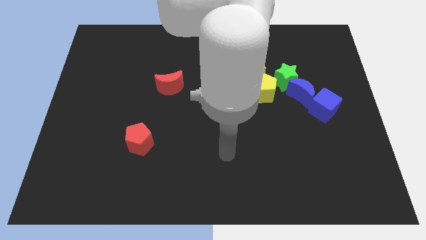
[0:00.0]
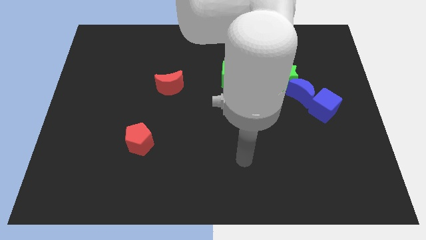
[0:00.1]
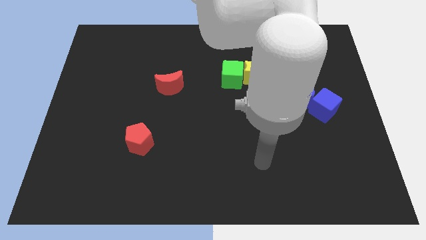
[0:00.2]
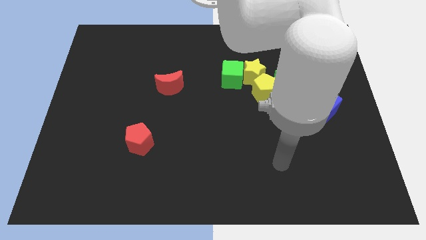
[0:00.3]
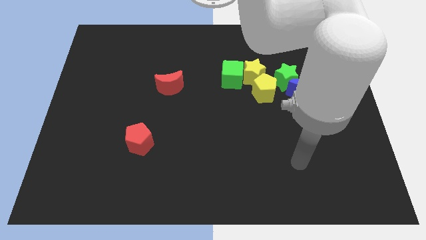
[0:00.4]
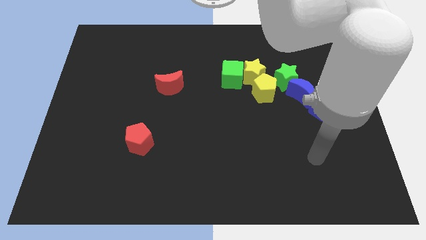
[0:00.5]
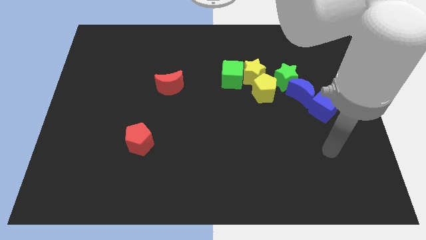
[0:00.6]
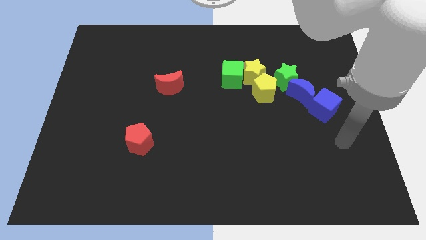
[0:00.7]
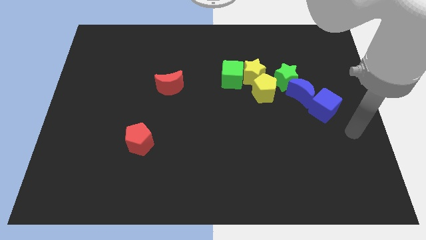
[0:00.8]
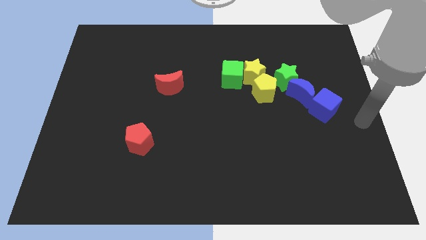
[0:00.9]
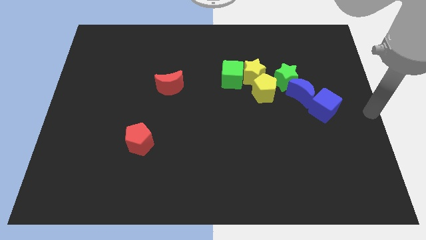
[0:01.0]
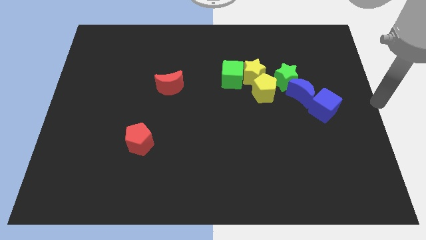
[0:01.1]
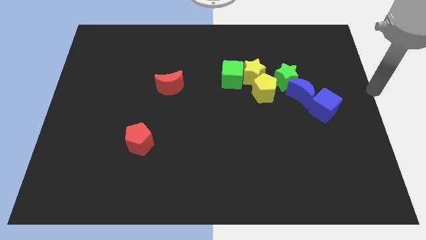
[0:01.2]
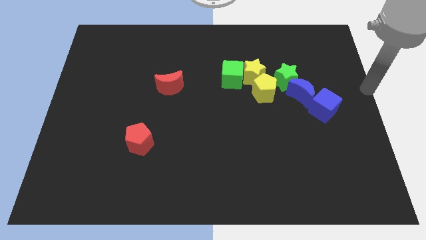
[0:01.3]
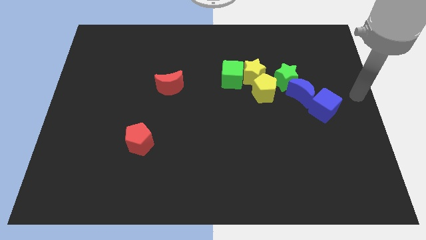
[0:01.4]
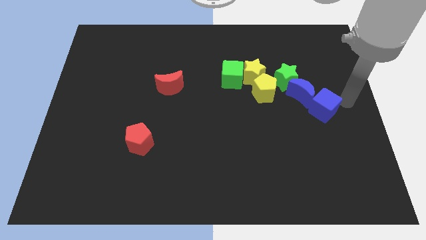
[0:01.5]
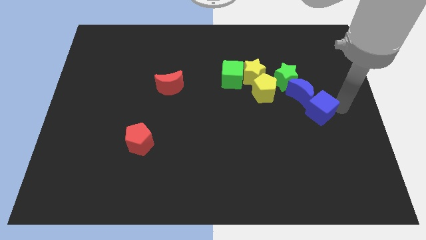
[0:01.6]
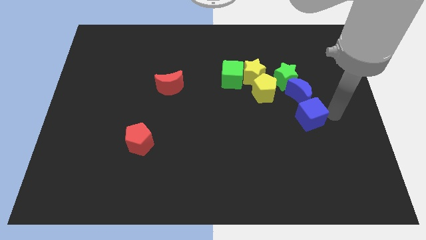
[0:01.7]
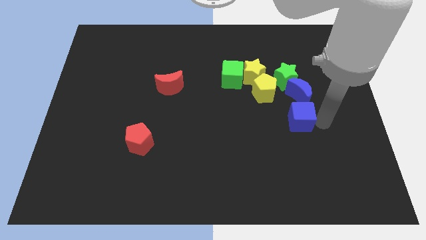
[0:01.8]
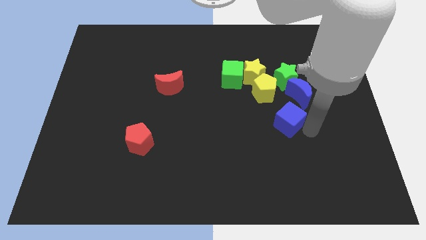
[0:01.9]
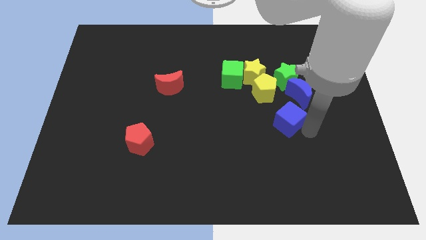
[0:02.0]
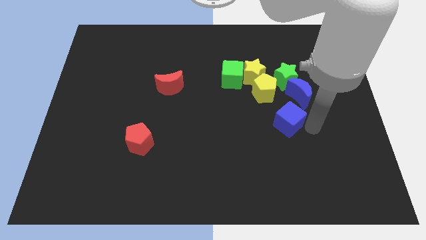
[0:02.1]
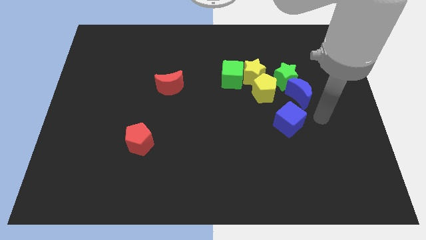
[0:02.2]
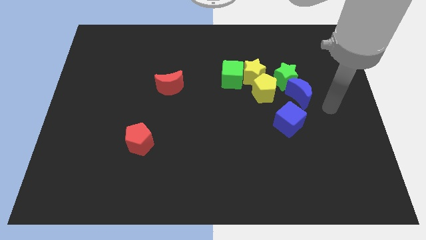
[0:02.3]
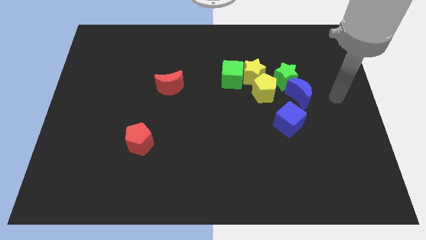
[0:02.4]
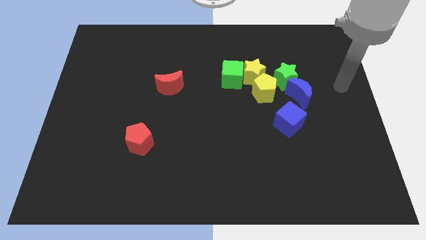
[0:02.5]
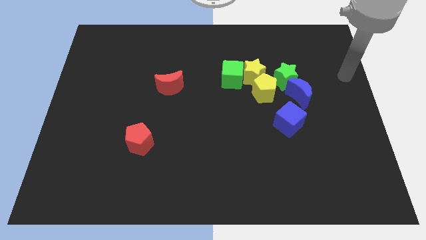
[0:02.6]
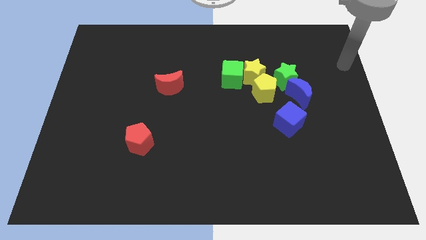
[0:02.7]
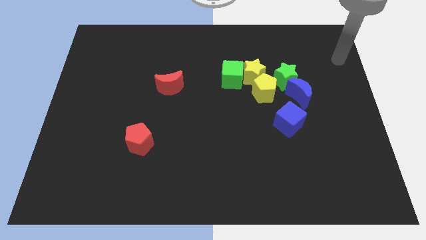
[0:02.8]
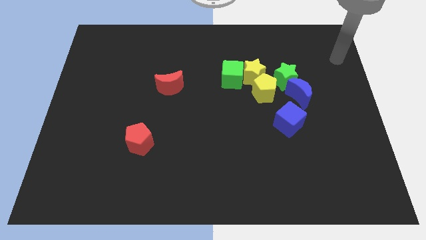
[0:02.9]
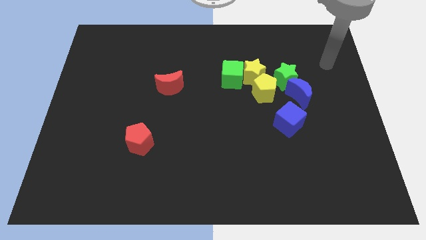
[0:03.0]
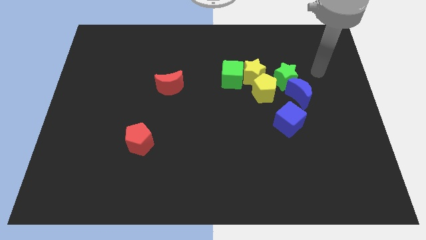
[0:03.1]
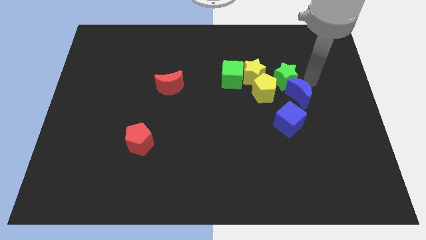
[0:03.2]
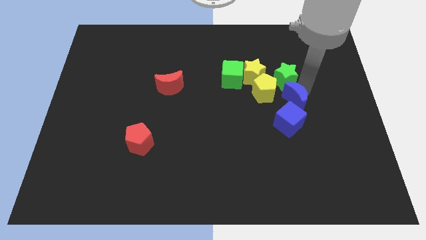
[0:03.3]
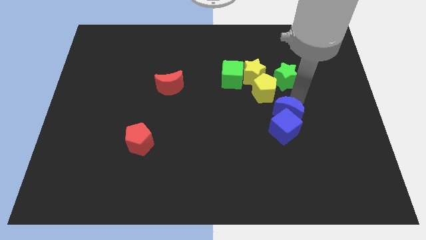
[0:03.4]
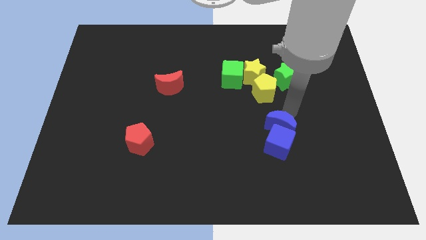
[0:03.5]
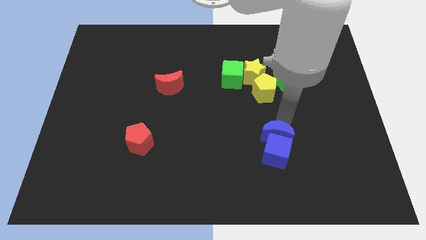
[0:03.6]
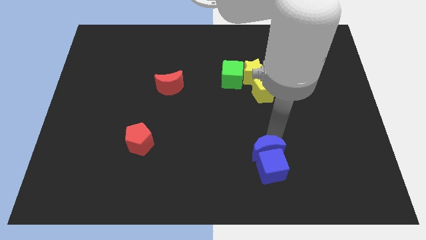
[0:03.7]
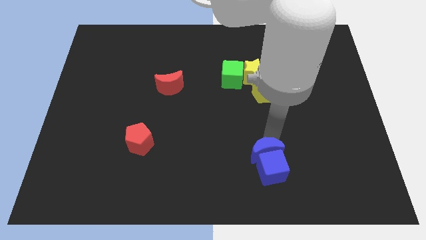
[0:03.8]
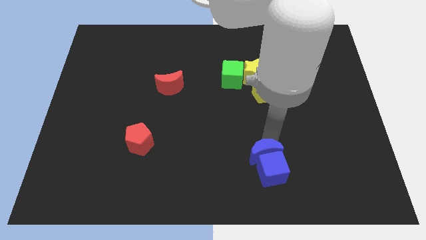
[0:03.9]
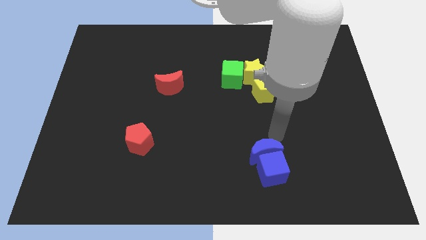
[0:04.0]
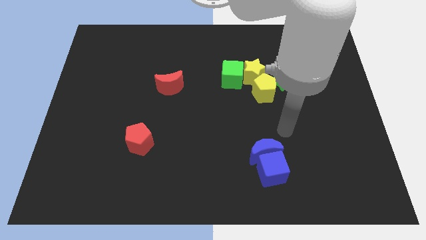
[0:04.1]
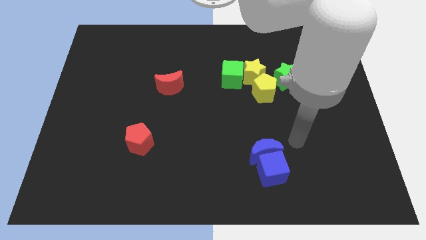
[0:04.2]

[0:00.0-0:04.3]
push the blue crescent along with blue cube to bottom

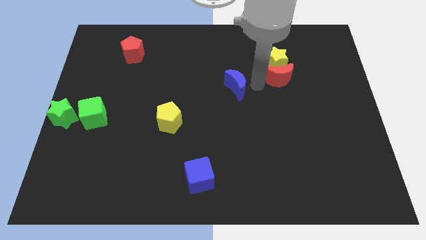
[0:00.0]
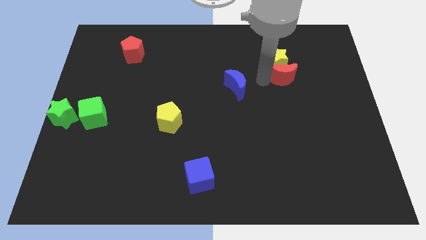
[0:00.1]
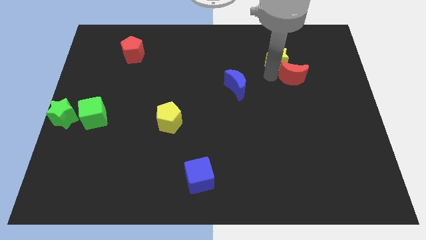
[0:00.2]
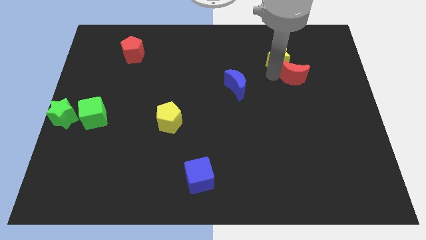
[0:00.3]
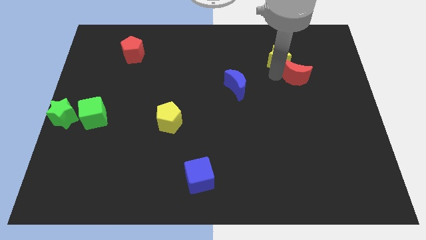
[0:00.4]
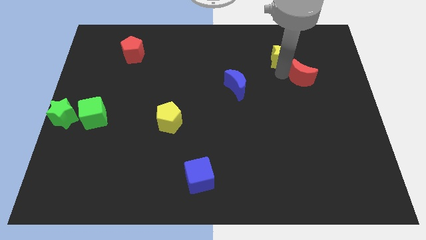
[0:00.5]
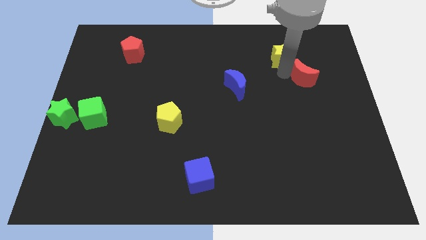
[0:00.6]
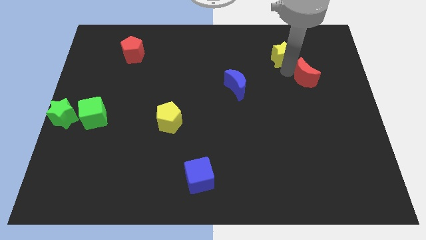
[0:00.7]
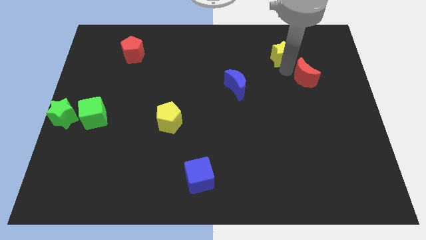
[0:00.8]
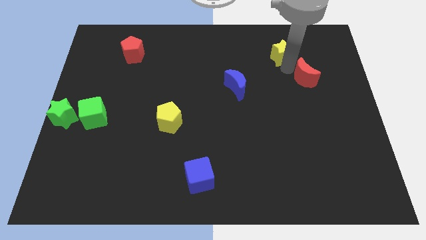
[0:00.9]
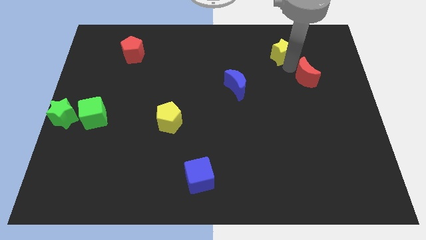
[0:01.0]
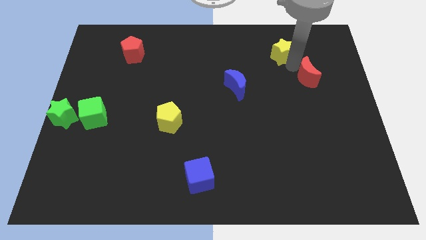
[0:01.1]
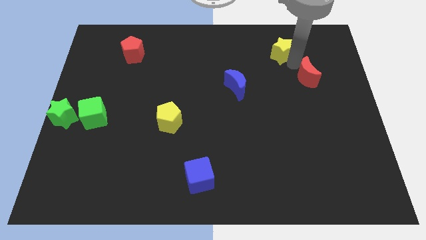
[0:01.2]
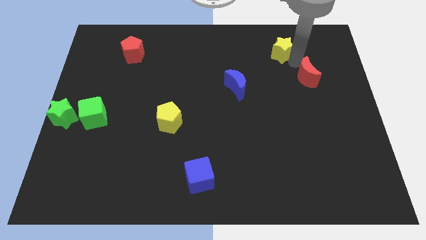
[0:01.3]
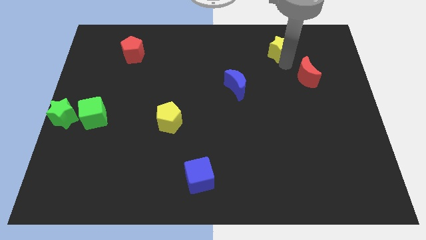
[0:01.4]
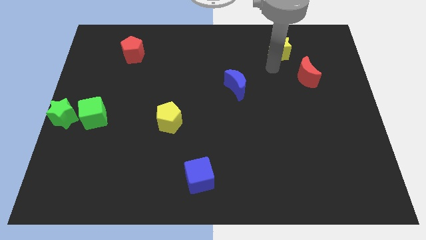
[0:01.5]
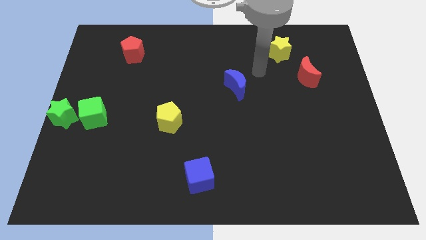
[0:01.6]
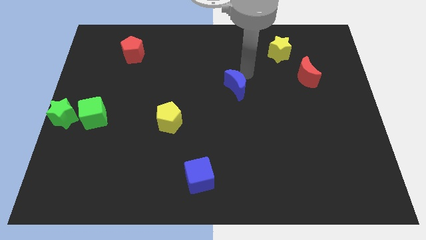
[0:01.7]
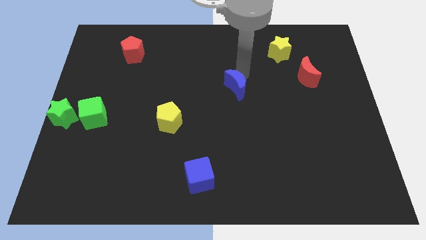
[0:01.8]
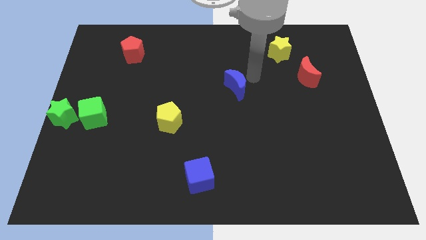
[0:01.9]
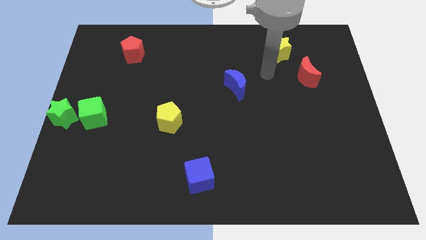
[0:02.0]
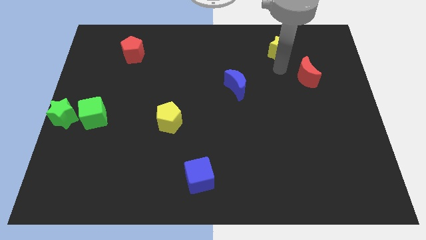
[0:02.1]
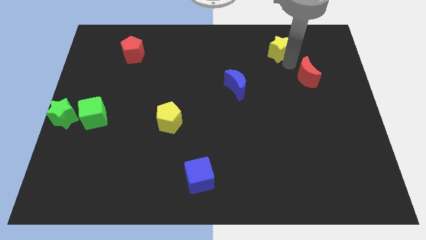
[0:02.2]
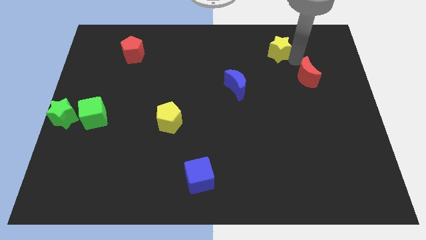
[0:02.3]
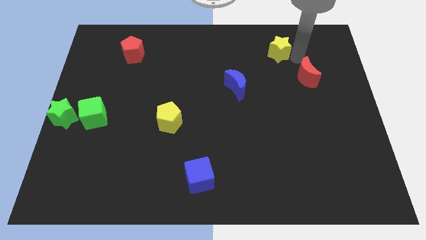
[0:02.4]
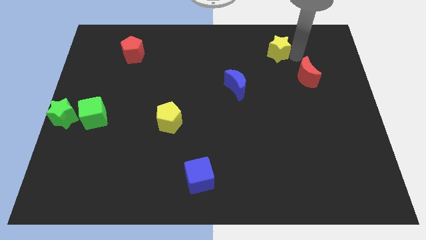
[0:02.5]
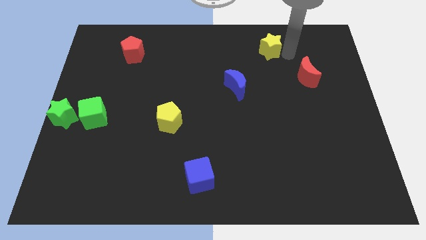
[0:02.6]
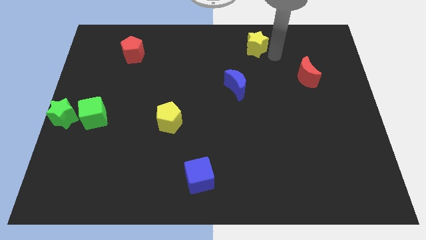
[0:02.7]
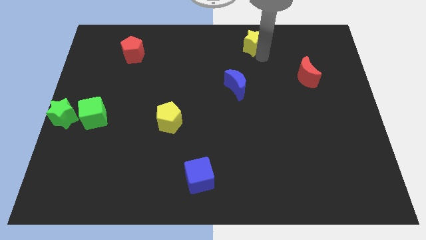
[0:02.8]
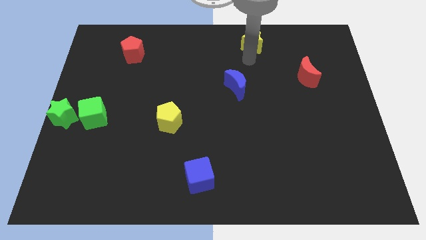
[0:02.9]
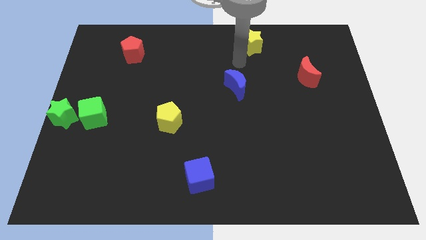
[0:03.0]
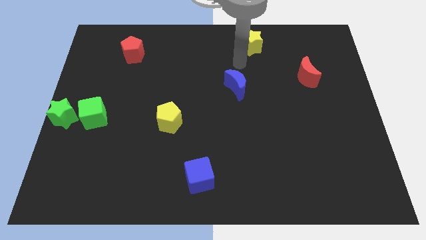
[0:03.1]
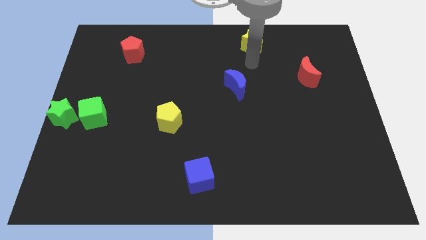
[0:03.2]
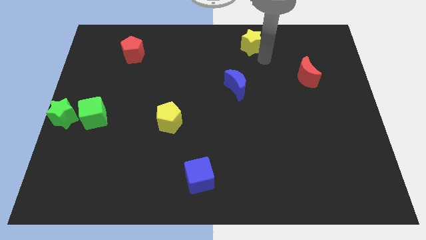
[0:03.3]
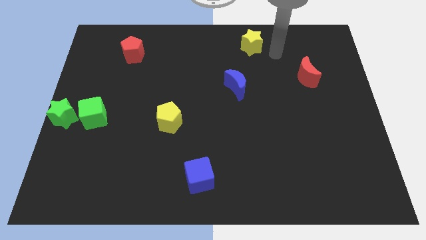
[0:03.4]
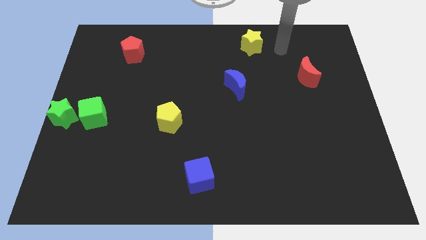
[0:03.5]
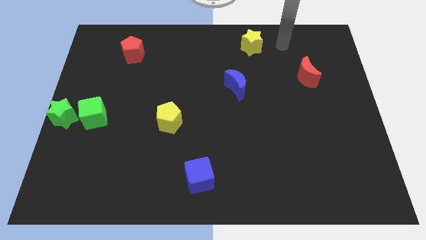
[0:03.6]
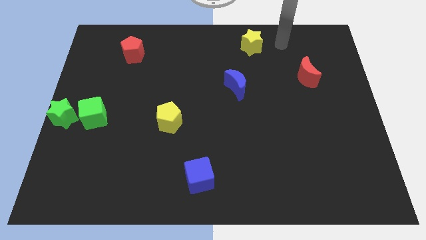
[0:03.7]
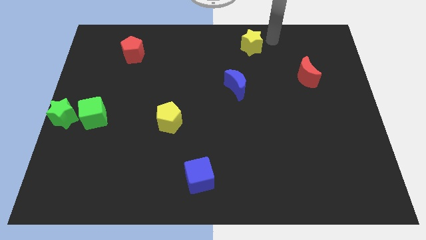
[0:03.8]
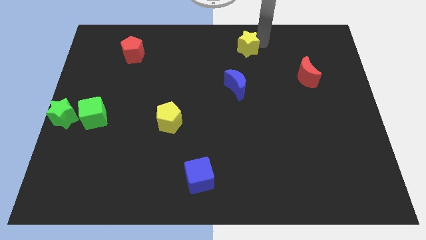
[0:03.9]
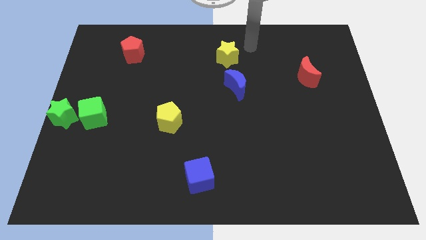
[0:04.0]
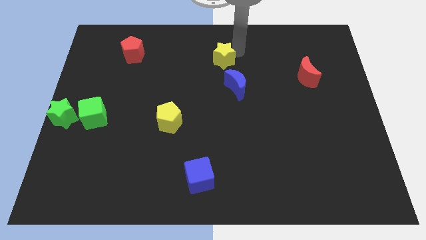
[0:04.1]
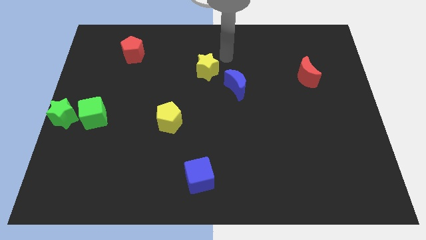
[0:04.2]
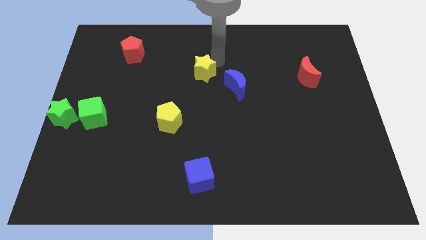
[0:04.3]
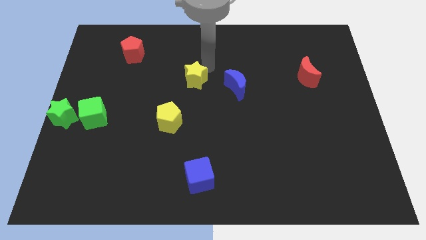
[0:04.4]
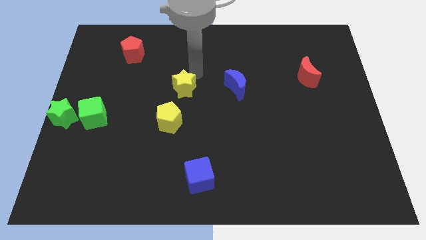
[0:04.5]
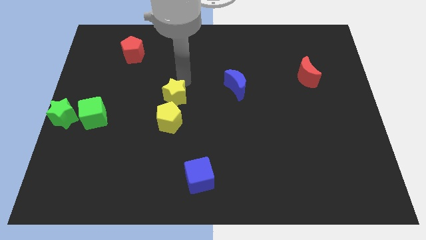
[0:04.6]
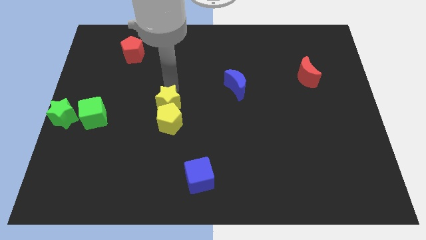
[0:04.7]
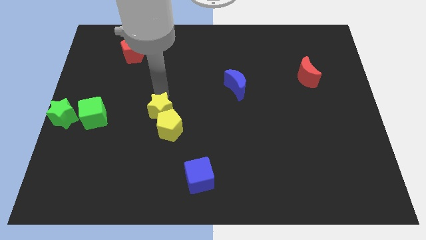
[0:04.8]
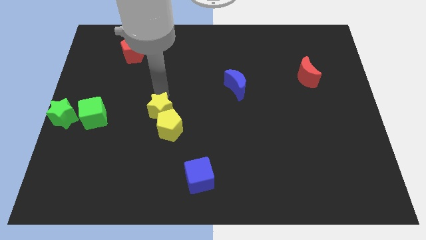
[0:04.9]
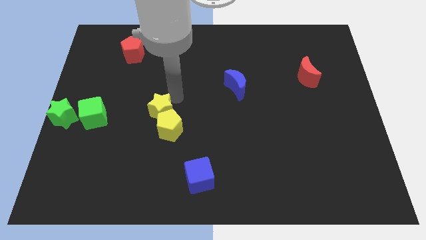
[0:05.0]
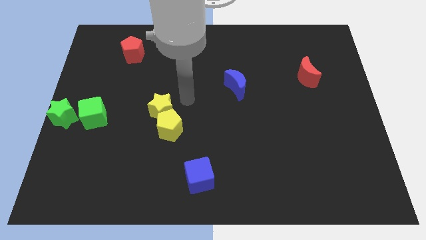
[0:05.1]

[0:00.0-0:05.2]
push the yellow star into the yellow pentagon
